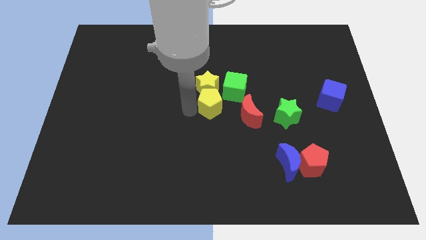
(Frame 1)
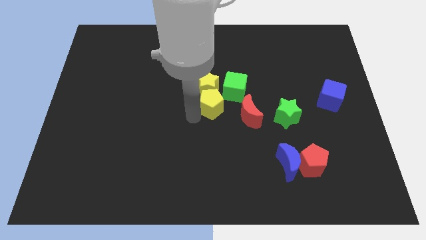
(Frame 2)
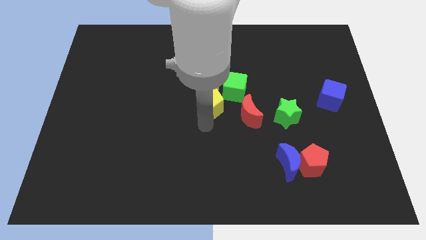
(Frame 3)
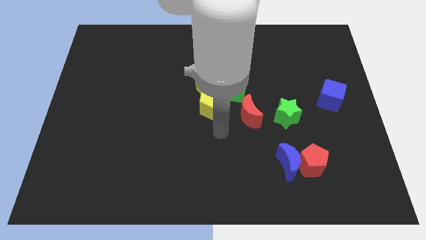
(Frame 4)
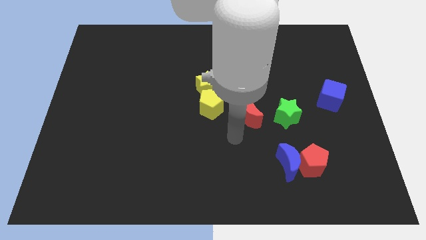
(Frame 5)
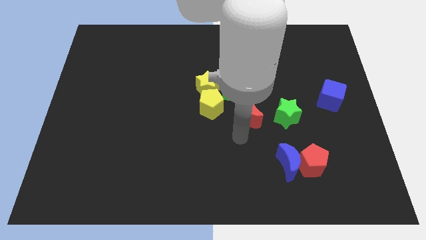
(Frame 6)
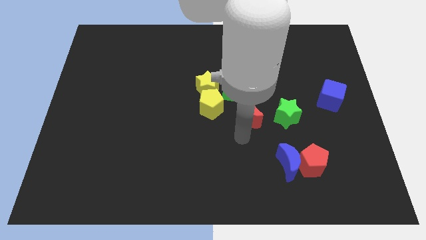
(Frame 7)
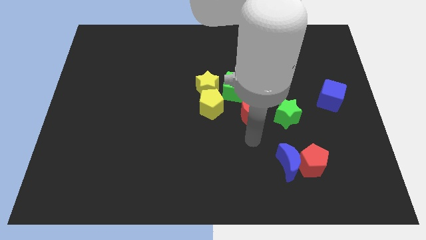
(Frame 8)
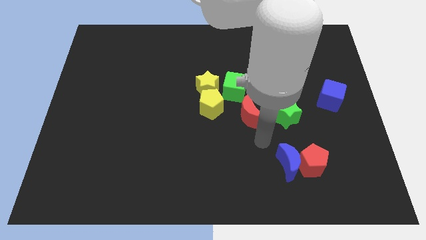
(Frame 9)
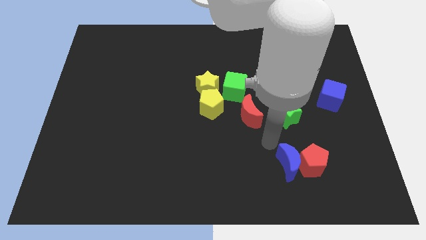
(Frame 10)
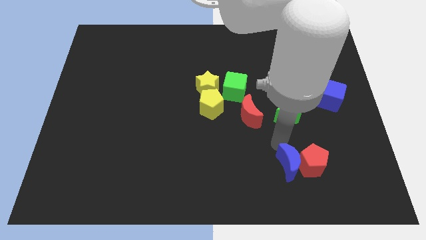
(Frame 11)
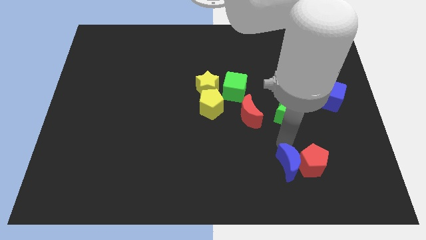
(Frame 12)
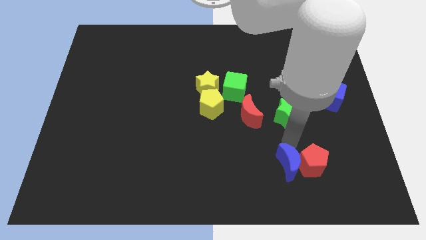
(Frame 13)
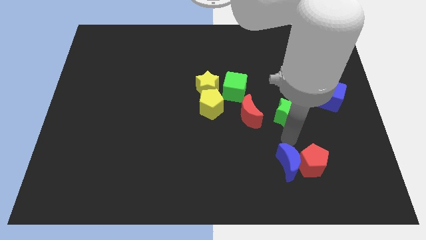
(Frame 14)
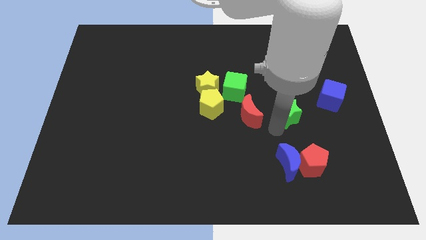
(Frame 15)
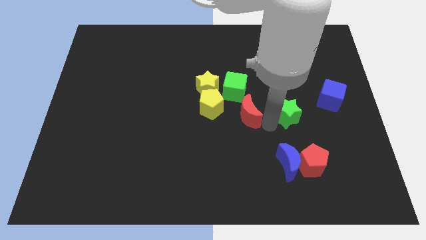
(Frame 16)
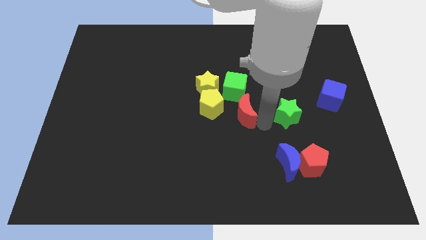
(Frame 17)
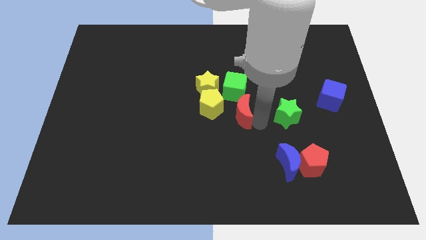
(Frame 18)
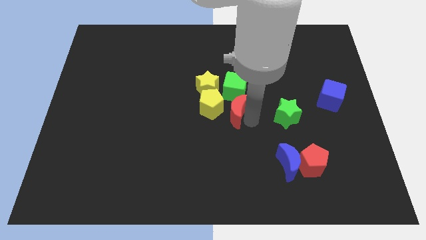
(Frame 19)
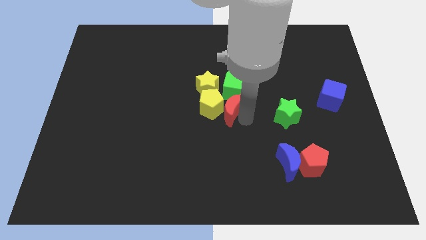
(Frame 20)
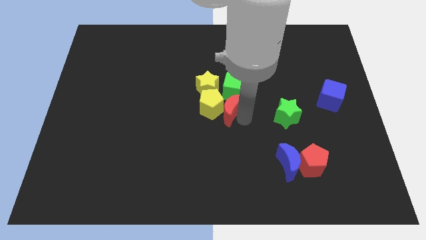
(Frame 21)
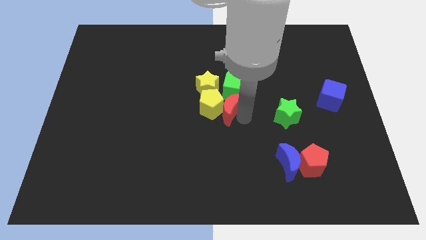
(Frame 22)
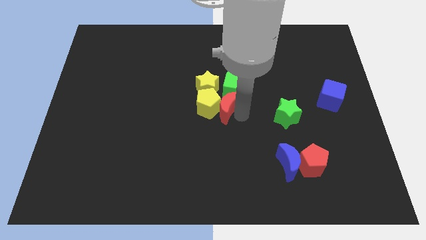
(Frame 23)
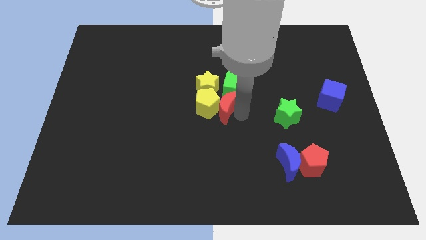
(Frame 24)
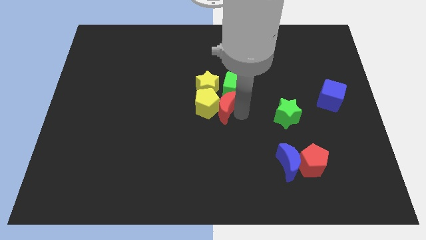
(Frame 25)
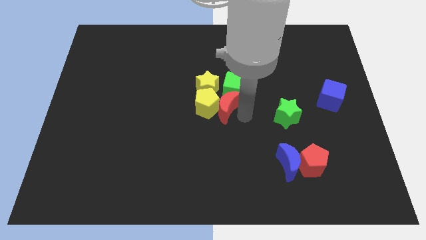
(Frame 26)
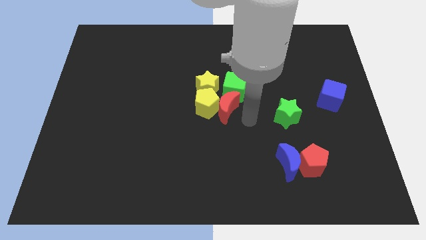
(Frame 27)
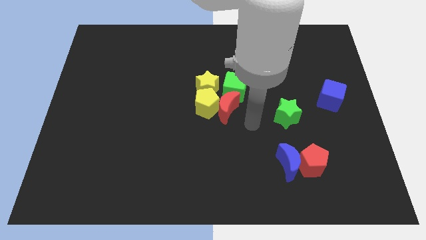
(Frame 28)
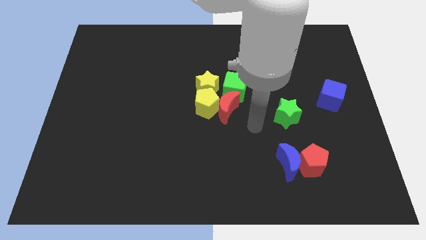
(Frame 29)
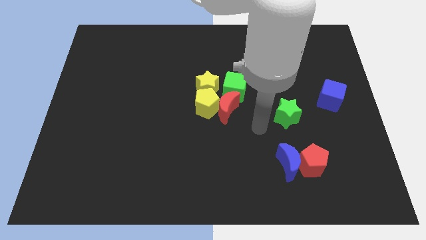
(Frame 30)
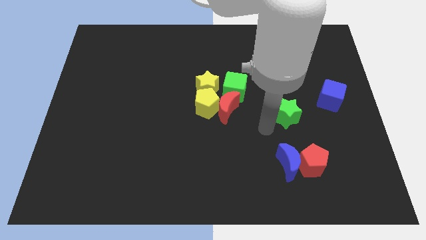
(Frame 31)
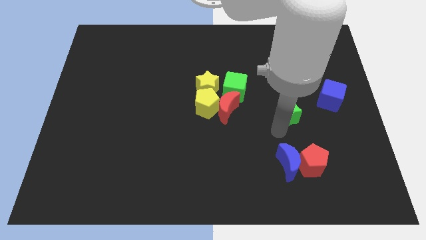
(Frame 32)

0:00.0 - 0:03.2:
put the red moon into the yellow pentagon

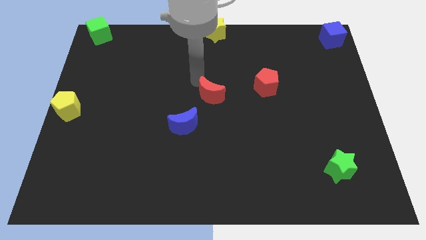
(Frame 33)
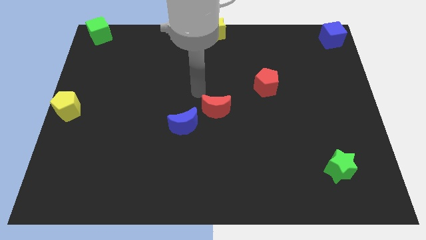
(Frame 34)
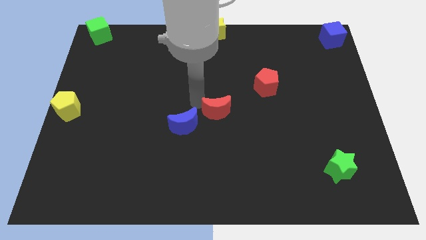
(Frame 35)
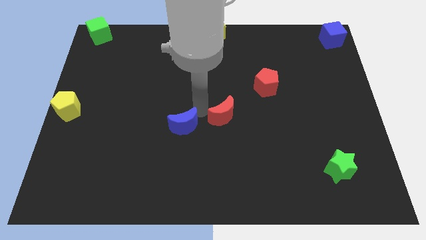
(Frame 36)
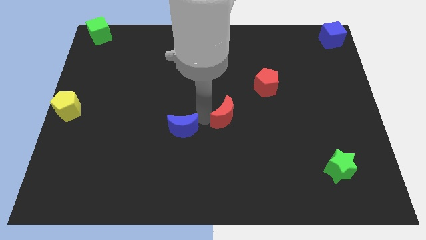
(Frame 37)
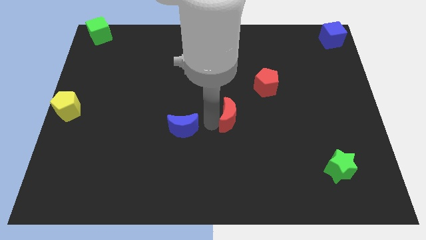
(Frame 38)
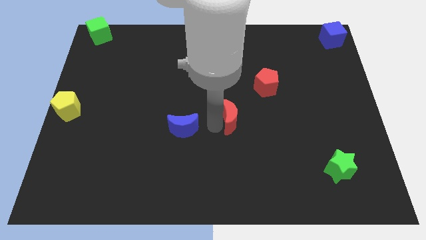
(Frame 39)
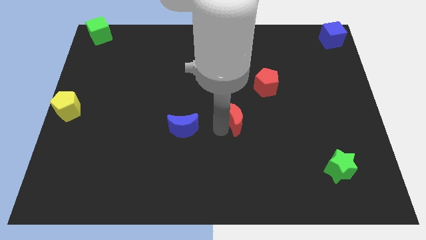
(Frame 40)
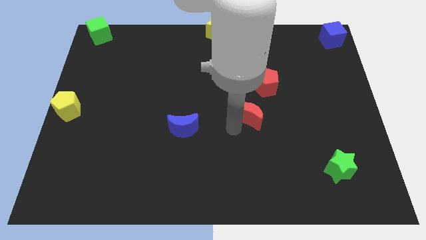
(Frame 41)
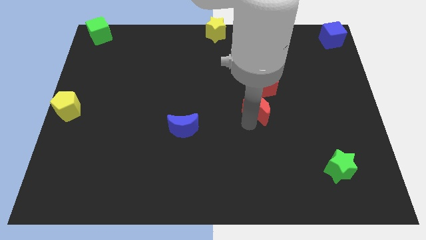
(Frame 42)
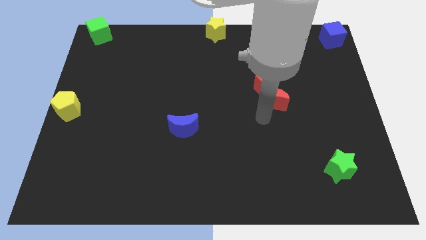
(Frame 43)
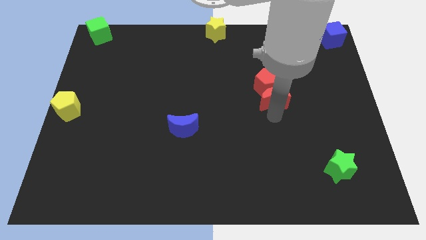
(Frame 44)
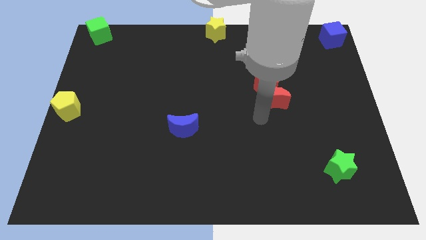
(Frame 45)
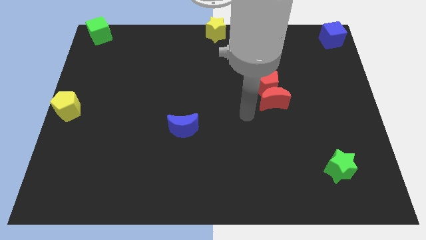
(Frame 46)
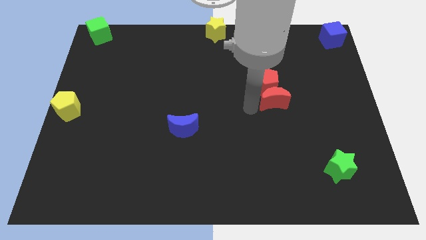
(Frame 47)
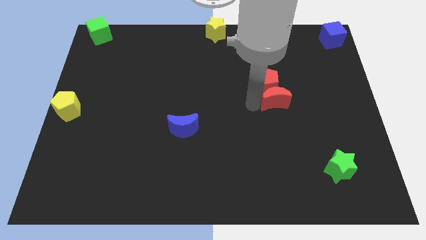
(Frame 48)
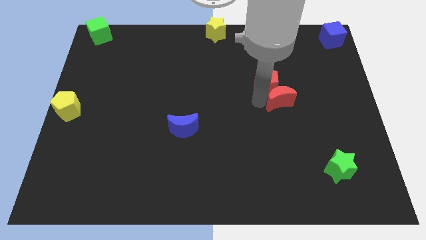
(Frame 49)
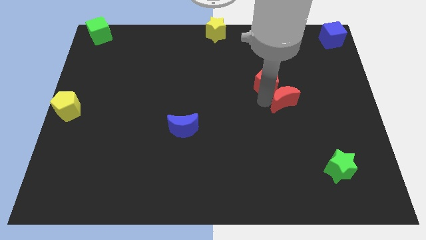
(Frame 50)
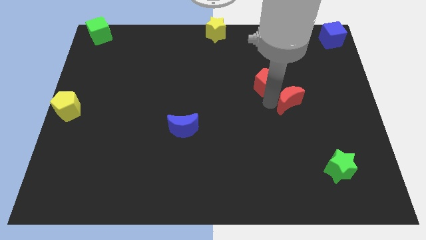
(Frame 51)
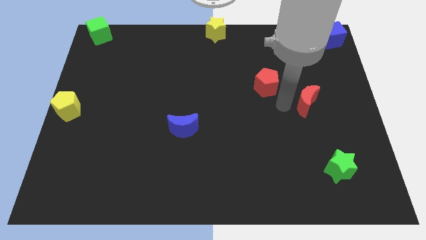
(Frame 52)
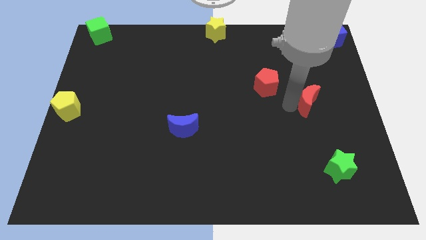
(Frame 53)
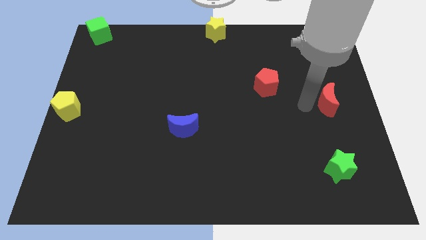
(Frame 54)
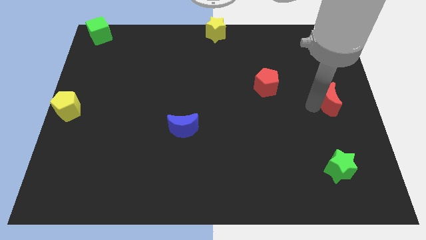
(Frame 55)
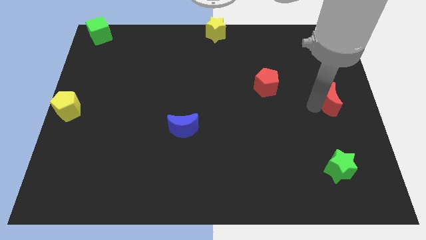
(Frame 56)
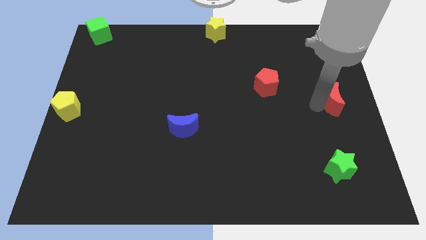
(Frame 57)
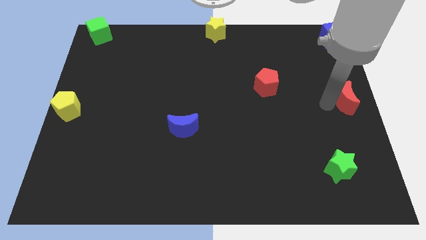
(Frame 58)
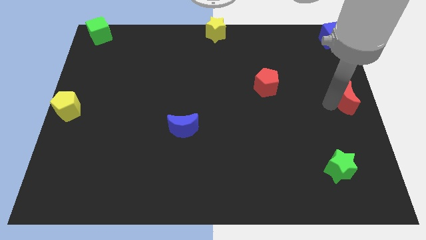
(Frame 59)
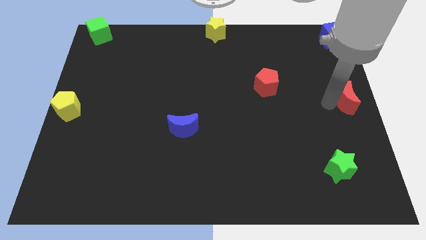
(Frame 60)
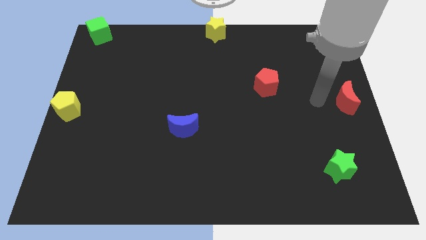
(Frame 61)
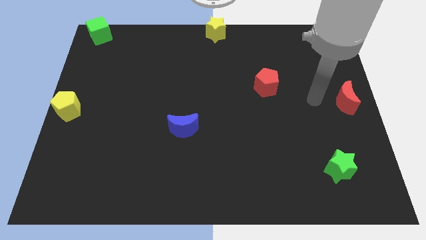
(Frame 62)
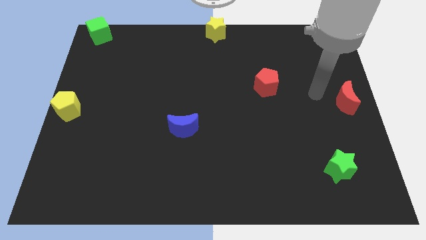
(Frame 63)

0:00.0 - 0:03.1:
move red crescent to the right of the board

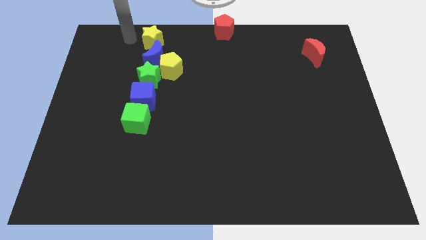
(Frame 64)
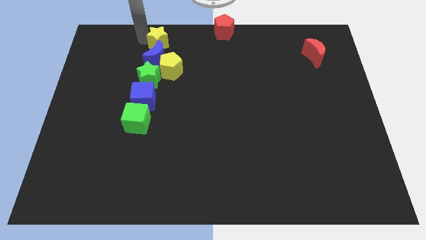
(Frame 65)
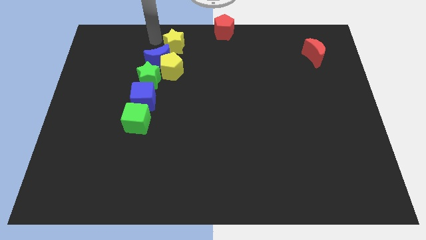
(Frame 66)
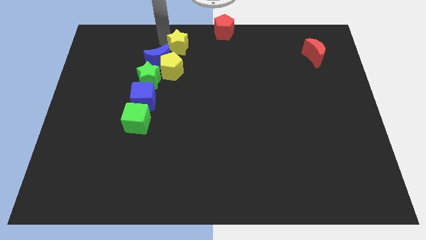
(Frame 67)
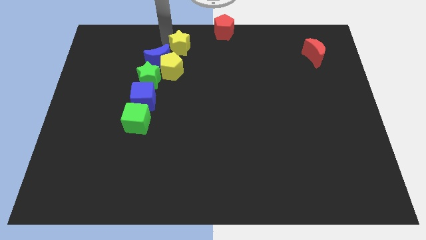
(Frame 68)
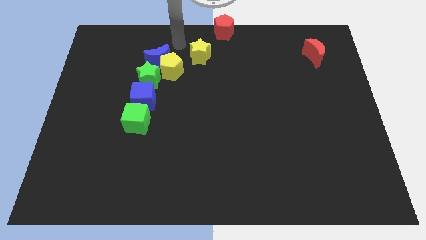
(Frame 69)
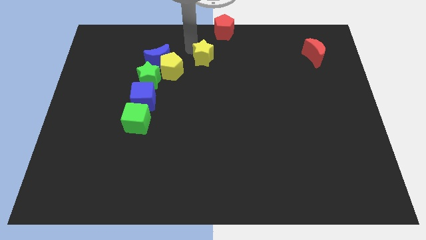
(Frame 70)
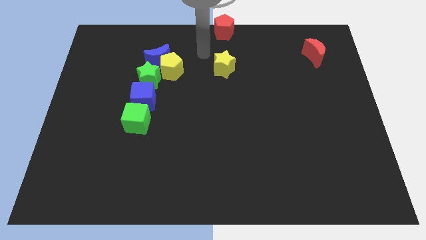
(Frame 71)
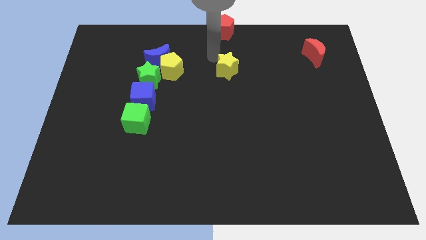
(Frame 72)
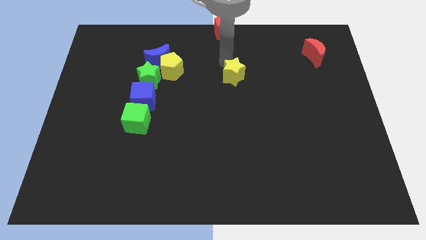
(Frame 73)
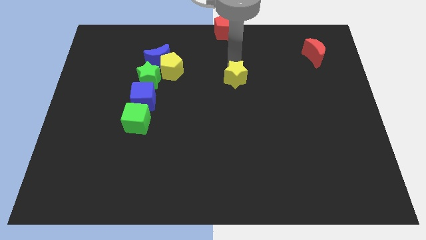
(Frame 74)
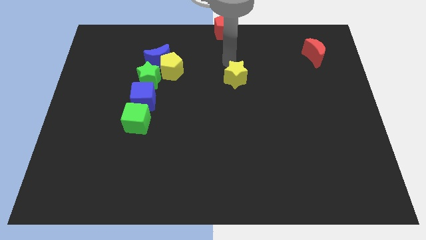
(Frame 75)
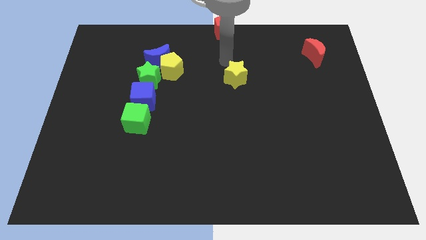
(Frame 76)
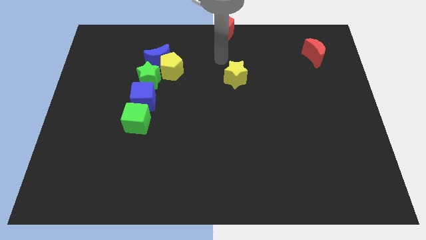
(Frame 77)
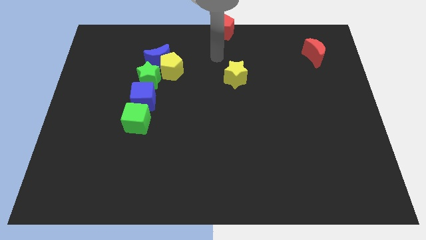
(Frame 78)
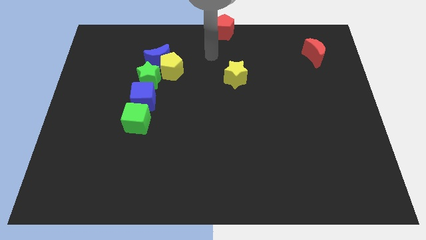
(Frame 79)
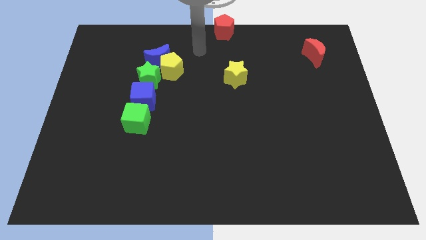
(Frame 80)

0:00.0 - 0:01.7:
move the yellow star diagonally on the bottom left side of the red moon

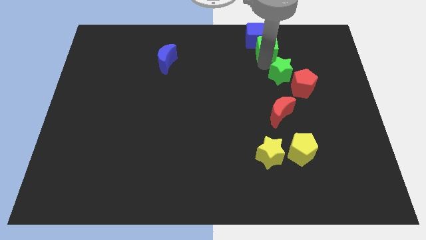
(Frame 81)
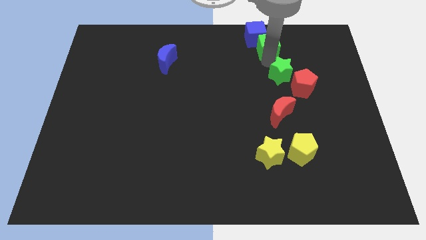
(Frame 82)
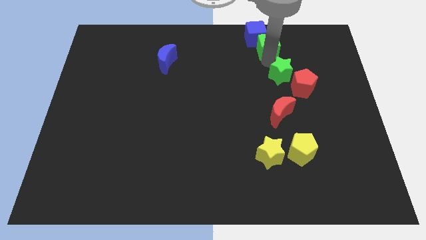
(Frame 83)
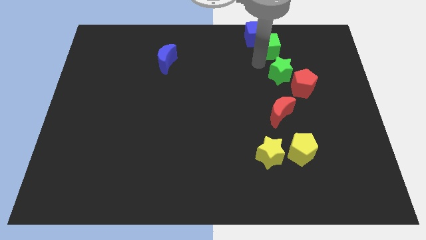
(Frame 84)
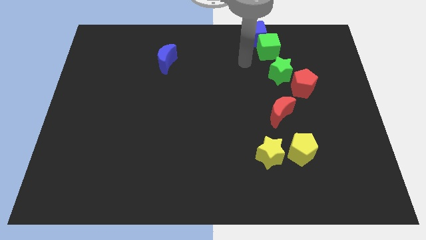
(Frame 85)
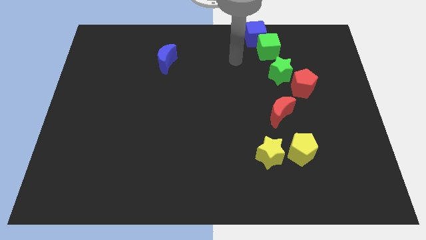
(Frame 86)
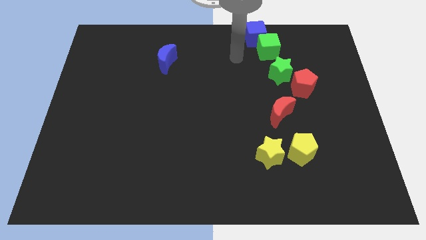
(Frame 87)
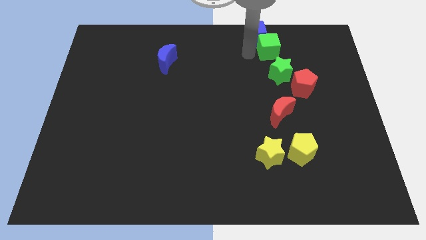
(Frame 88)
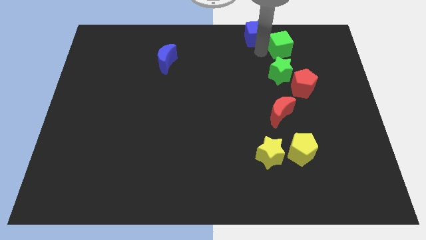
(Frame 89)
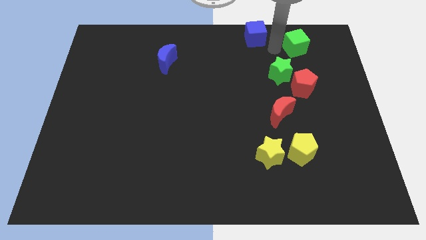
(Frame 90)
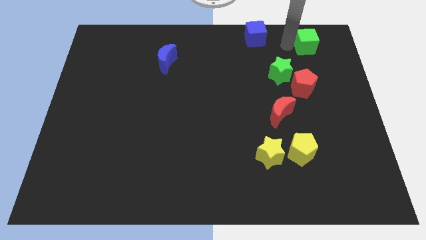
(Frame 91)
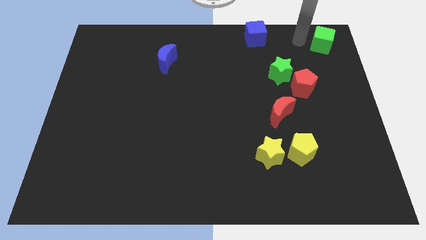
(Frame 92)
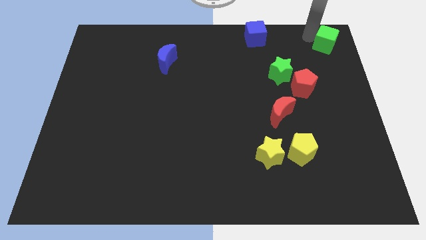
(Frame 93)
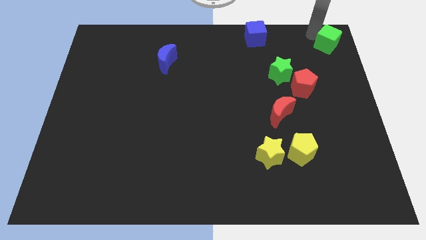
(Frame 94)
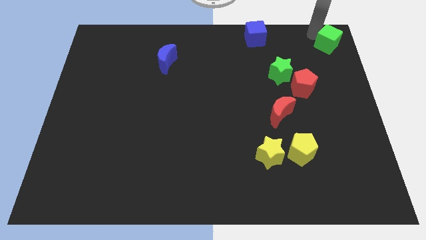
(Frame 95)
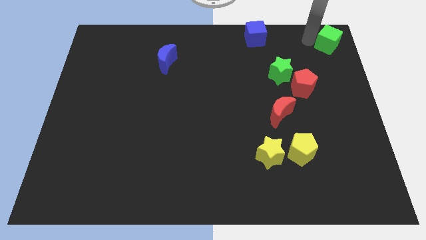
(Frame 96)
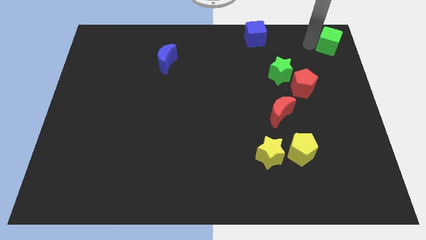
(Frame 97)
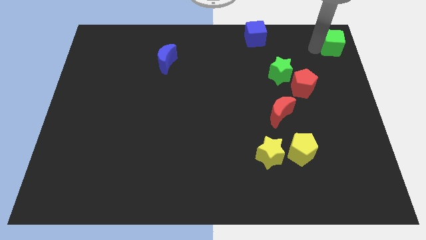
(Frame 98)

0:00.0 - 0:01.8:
move the green cube to the top right
